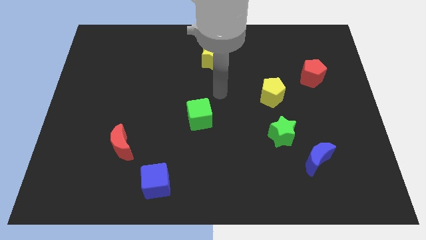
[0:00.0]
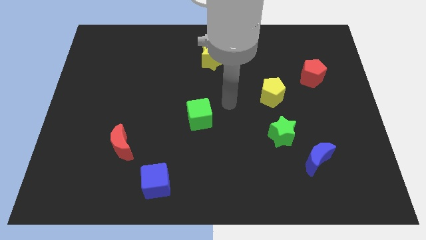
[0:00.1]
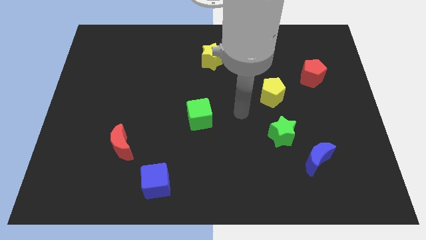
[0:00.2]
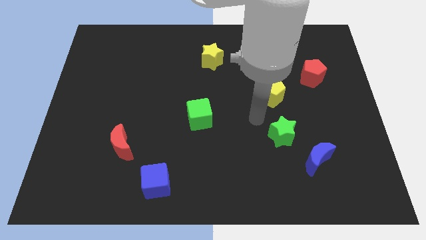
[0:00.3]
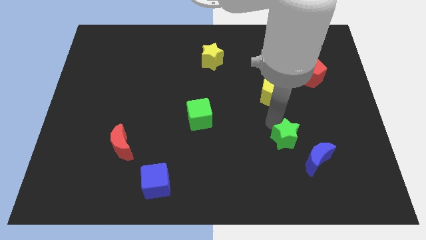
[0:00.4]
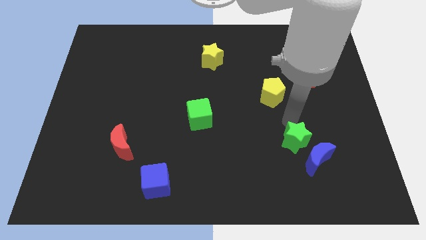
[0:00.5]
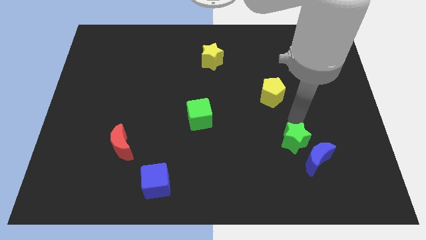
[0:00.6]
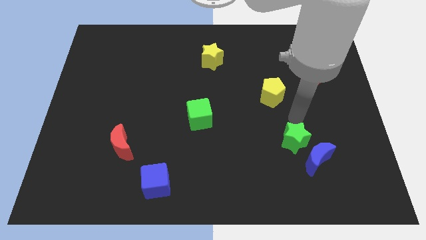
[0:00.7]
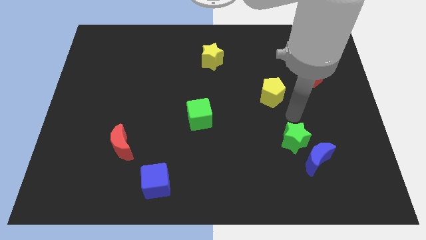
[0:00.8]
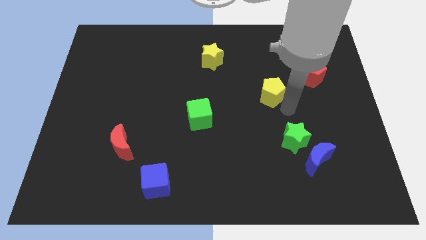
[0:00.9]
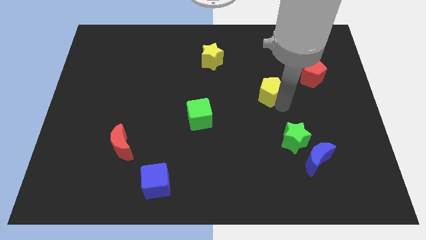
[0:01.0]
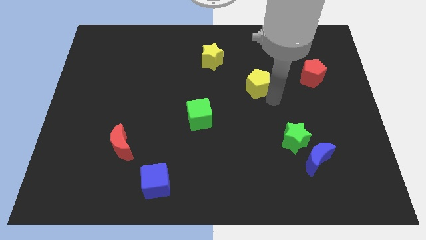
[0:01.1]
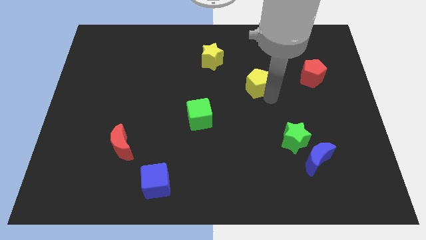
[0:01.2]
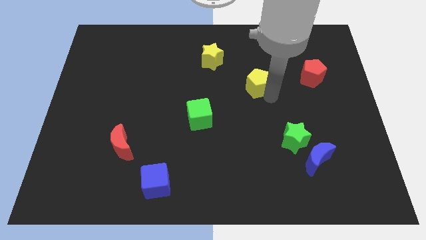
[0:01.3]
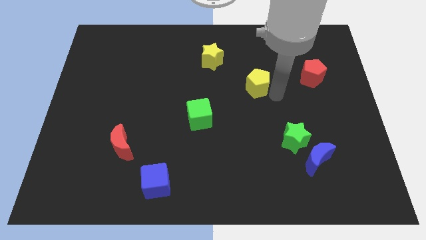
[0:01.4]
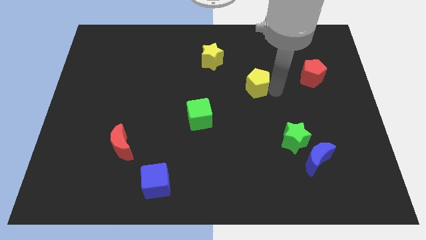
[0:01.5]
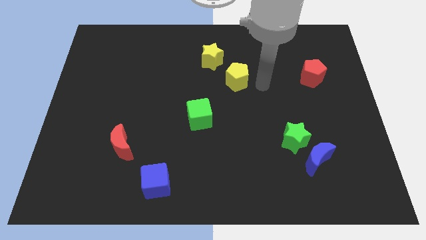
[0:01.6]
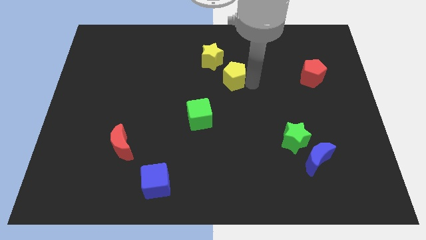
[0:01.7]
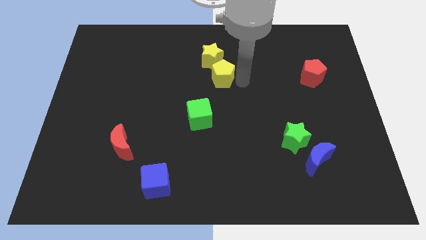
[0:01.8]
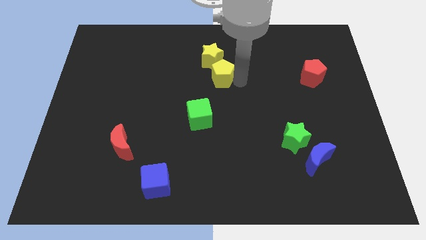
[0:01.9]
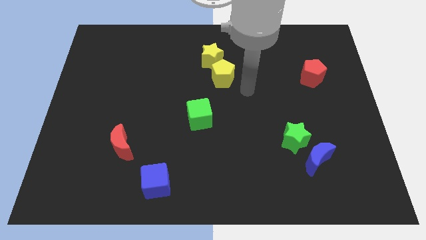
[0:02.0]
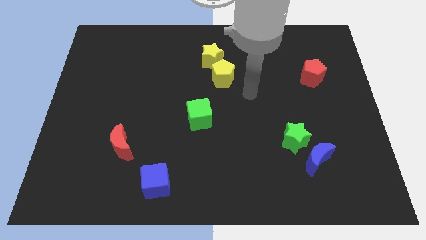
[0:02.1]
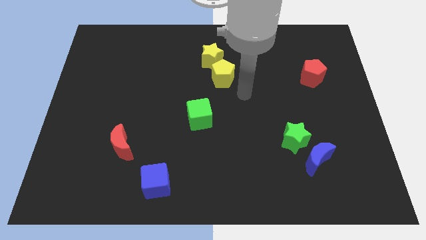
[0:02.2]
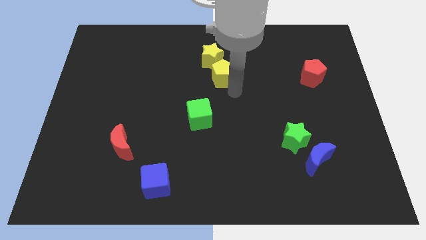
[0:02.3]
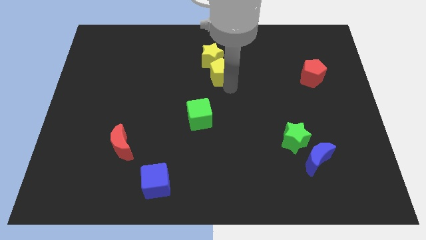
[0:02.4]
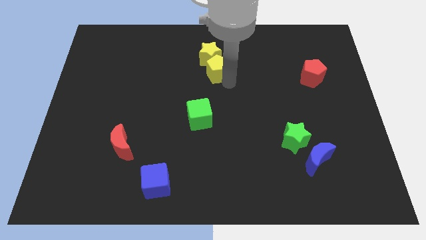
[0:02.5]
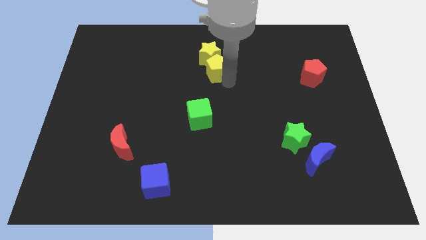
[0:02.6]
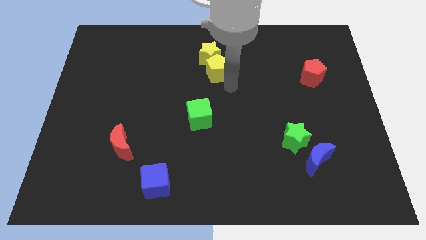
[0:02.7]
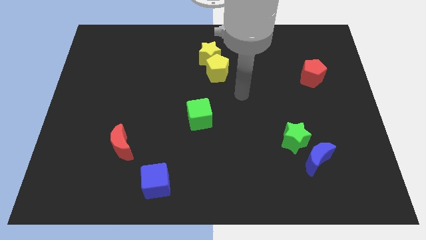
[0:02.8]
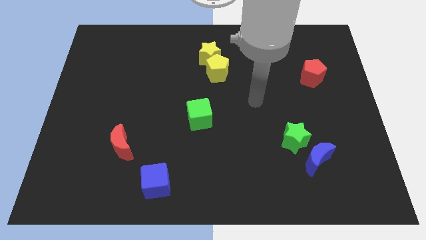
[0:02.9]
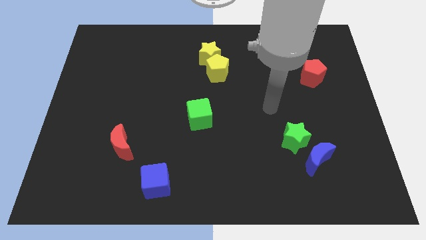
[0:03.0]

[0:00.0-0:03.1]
move the yellow pentagon into the bottom side of the yellow star

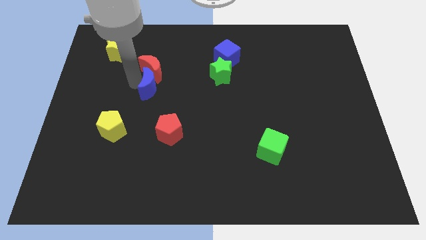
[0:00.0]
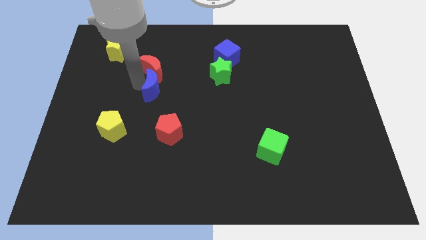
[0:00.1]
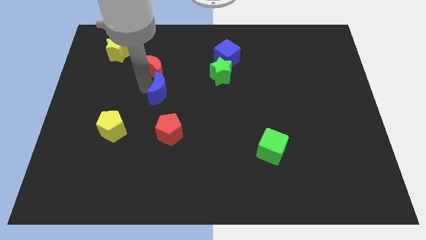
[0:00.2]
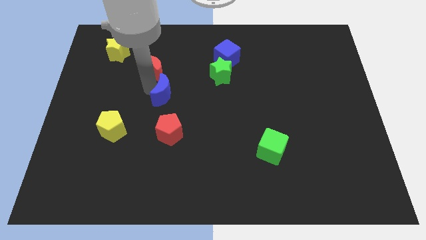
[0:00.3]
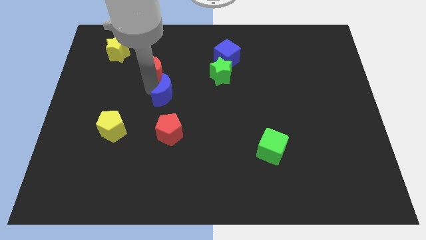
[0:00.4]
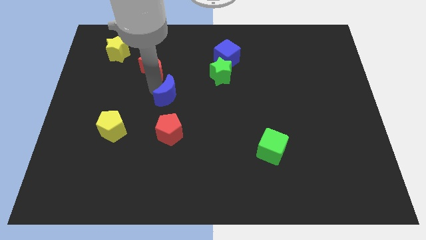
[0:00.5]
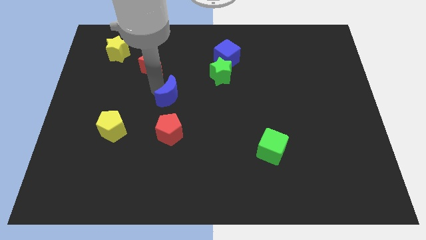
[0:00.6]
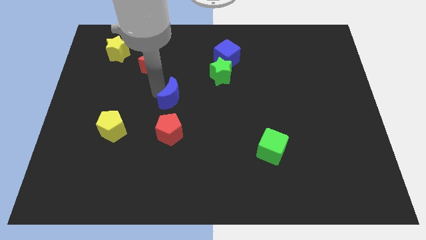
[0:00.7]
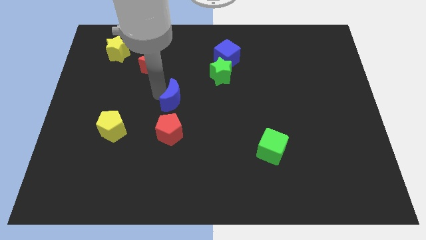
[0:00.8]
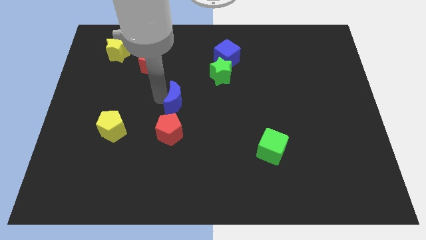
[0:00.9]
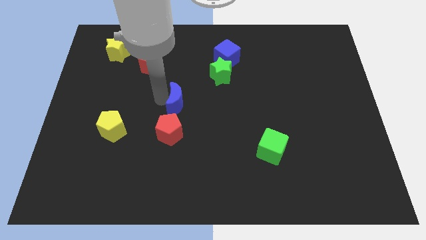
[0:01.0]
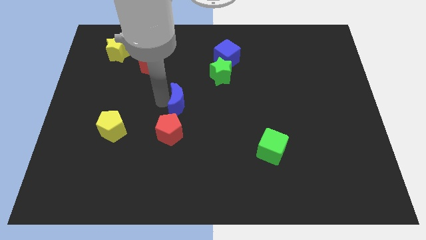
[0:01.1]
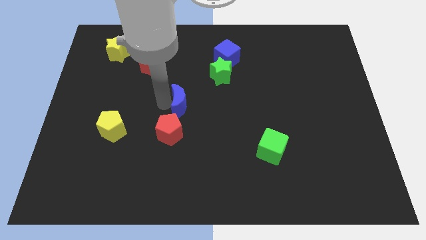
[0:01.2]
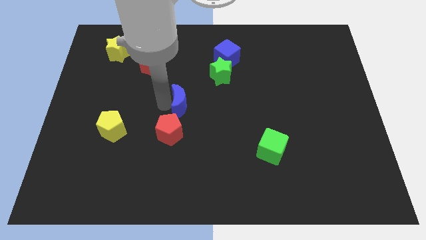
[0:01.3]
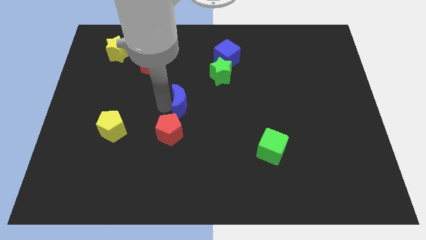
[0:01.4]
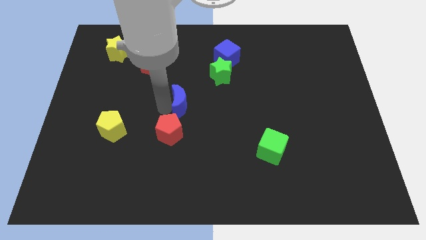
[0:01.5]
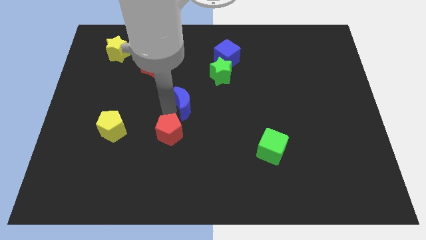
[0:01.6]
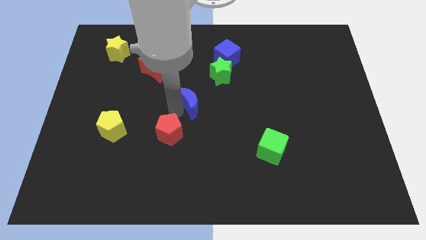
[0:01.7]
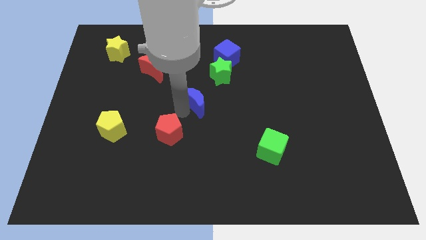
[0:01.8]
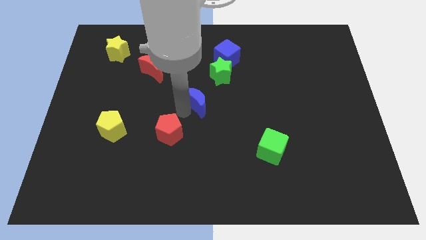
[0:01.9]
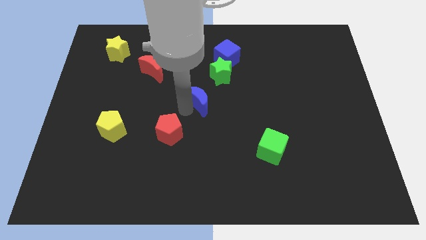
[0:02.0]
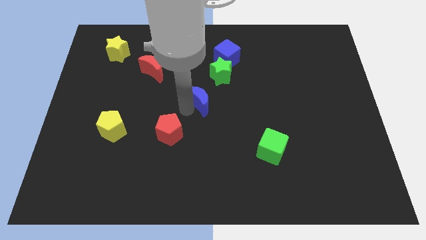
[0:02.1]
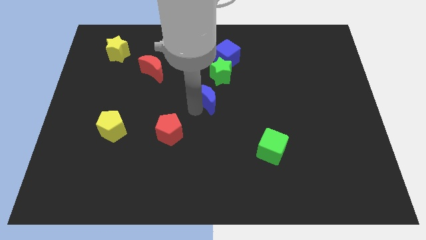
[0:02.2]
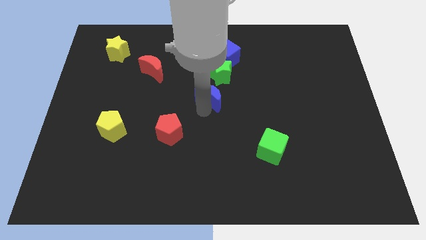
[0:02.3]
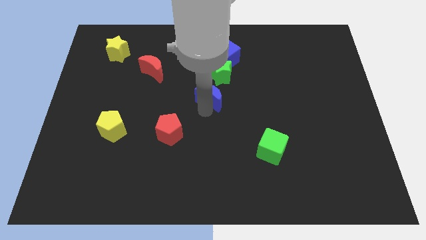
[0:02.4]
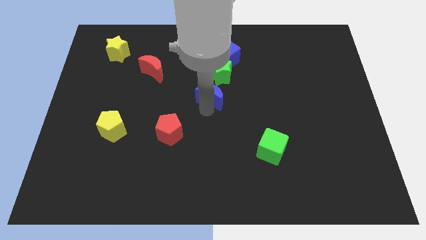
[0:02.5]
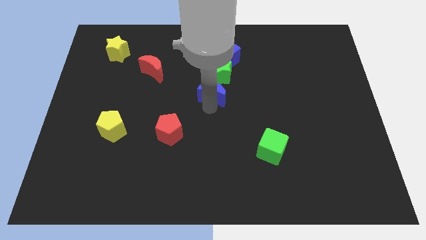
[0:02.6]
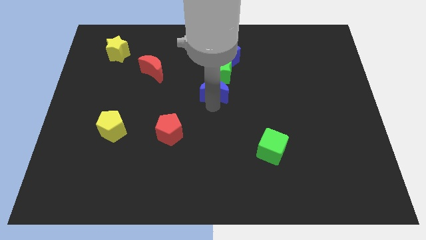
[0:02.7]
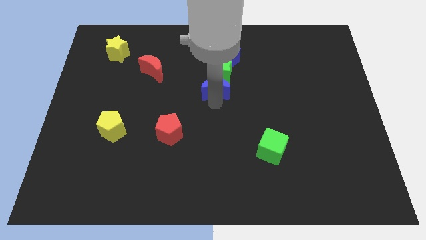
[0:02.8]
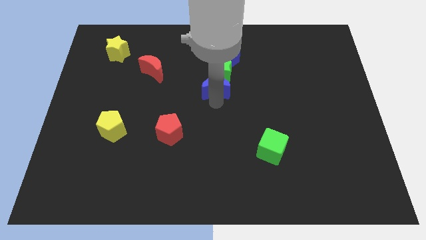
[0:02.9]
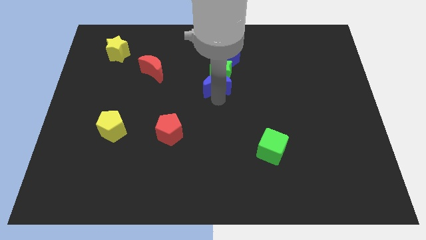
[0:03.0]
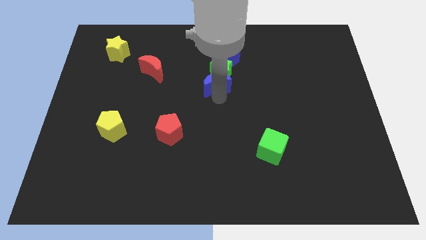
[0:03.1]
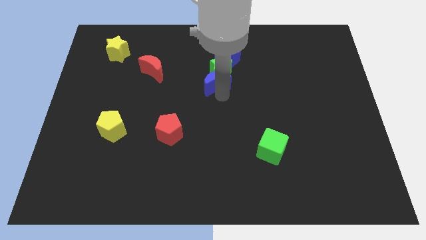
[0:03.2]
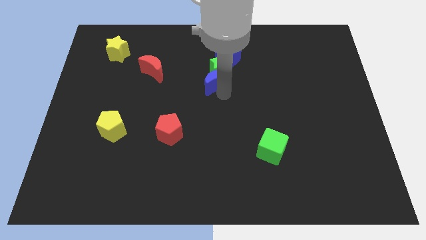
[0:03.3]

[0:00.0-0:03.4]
push blue crescent below the green star

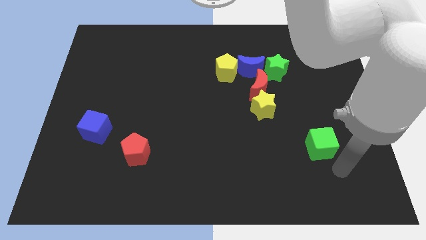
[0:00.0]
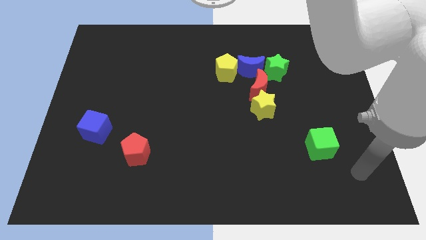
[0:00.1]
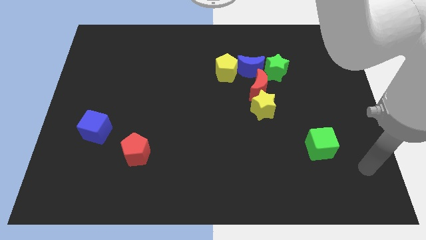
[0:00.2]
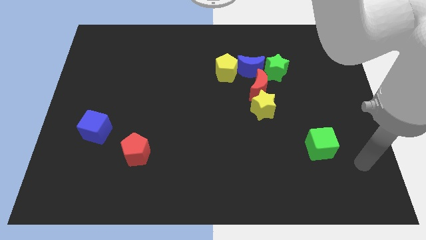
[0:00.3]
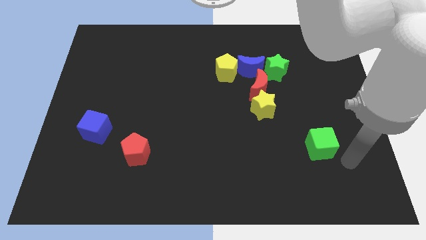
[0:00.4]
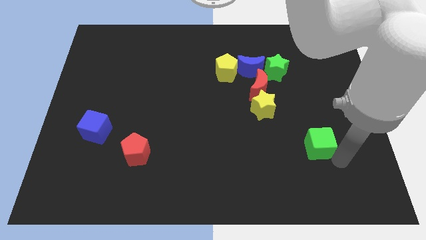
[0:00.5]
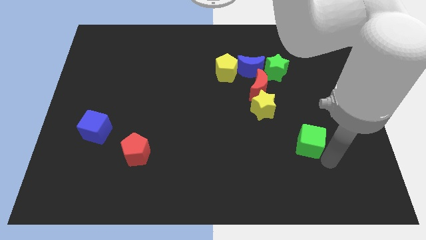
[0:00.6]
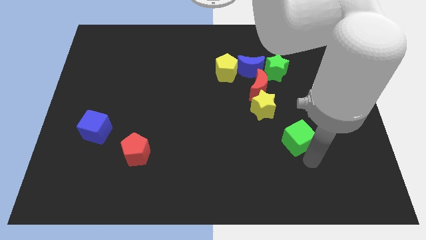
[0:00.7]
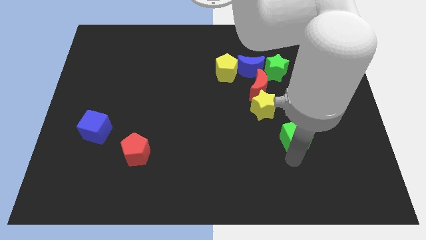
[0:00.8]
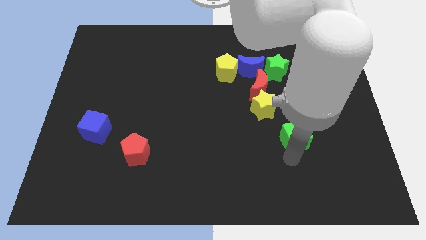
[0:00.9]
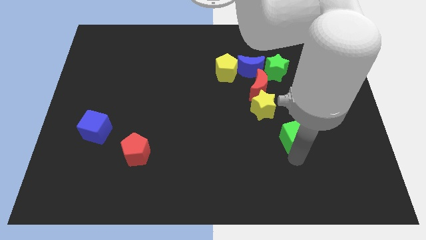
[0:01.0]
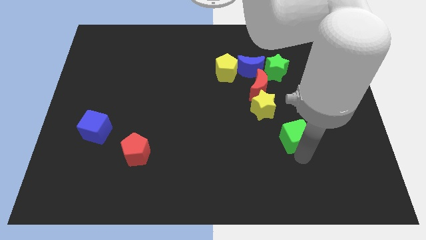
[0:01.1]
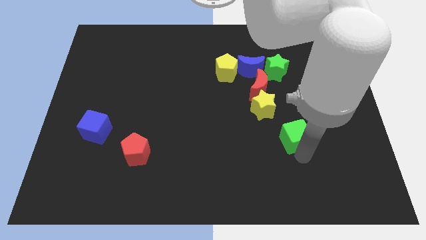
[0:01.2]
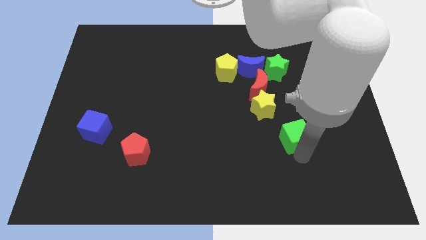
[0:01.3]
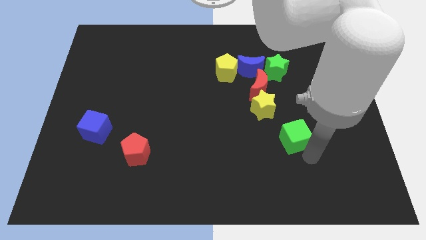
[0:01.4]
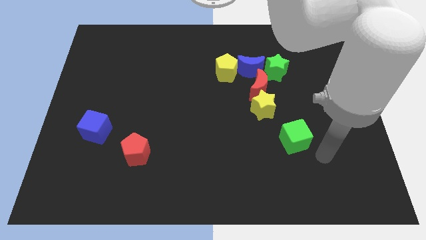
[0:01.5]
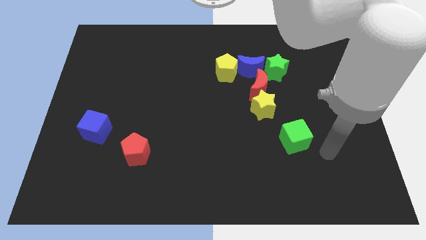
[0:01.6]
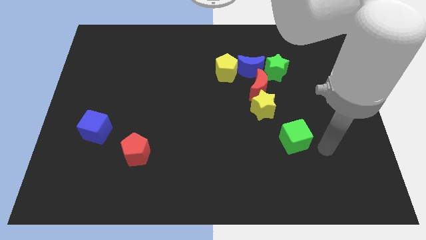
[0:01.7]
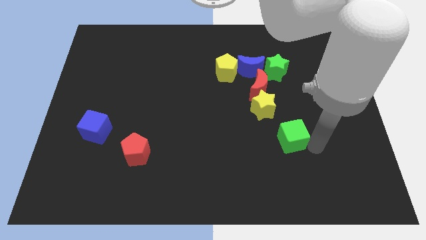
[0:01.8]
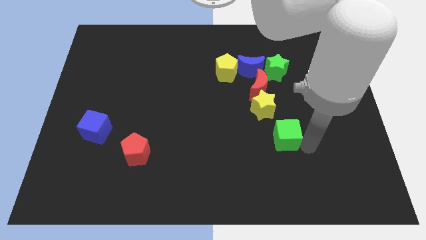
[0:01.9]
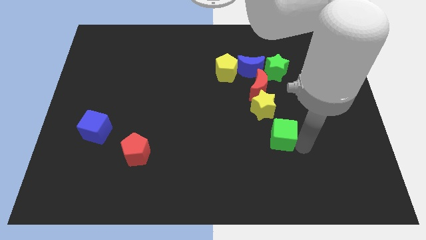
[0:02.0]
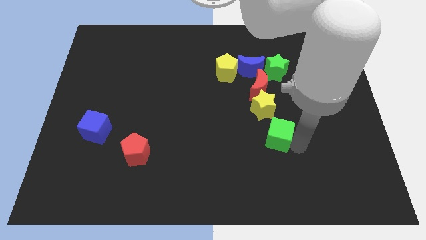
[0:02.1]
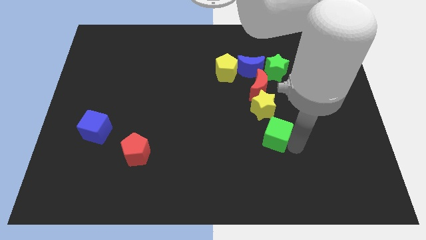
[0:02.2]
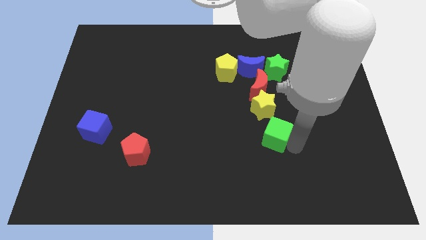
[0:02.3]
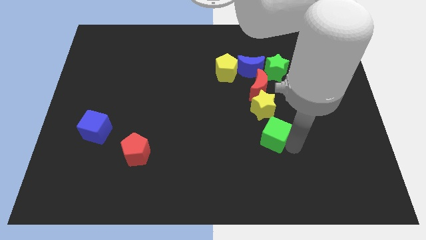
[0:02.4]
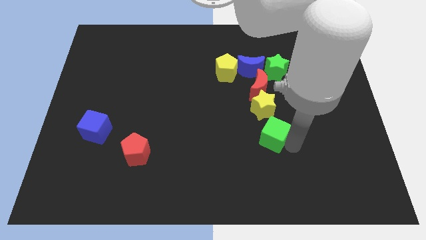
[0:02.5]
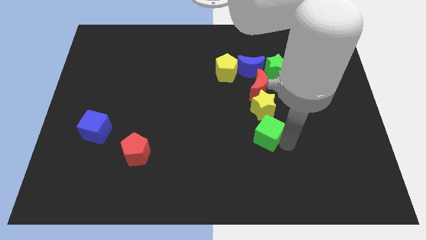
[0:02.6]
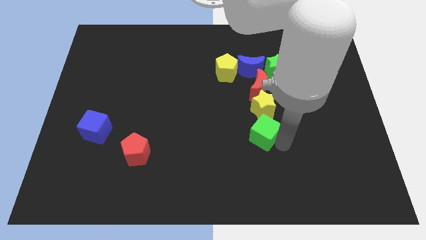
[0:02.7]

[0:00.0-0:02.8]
move the green cube below the yellow star
